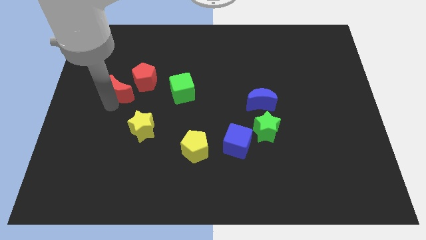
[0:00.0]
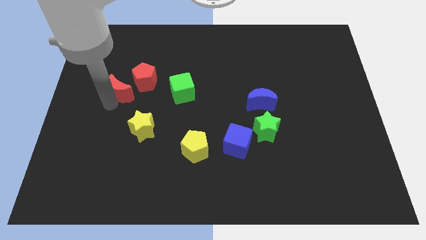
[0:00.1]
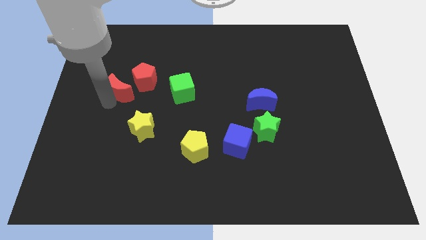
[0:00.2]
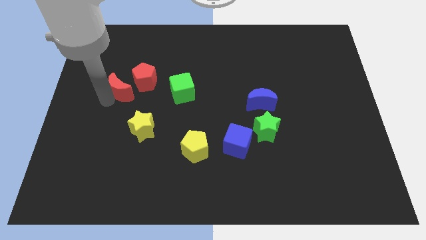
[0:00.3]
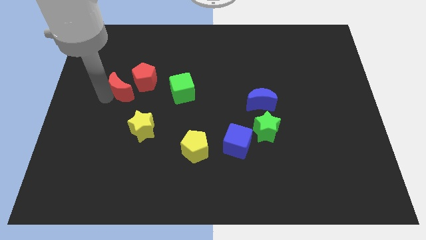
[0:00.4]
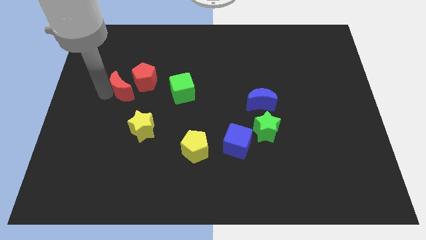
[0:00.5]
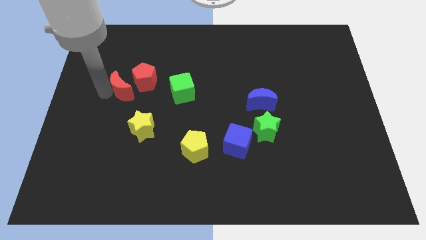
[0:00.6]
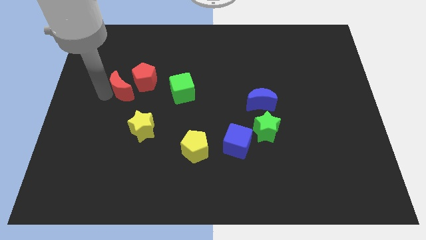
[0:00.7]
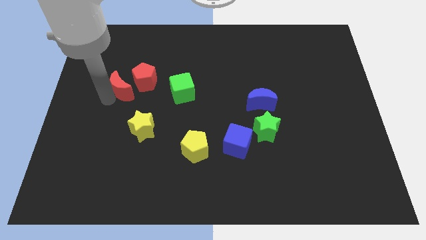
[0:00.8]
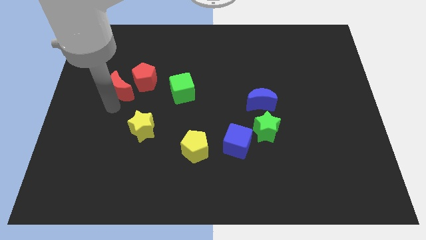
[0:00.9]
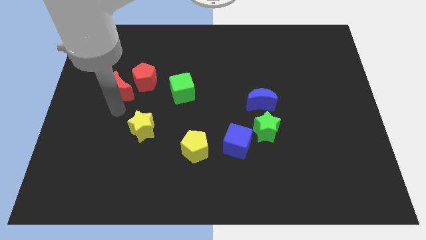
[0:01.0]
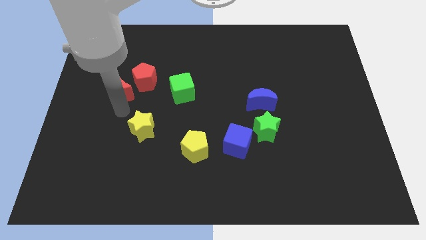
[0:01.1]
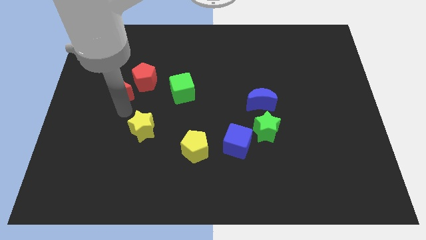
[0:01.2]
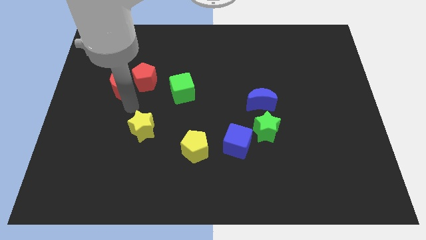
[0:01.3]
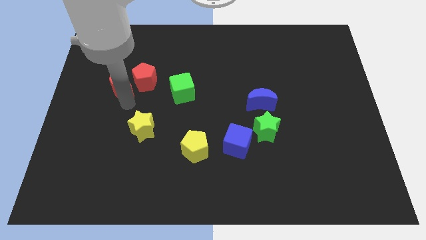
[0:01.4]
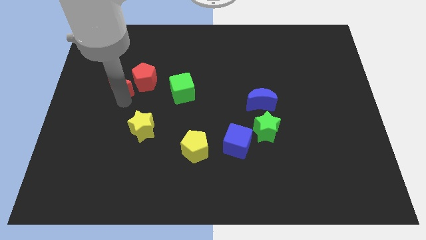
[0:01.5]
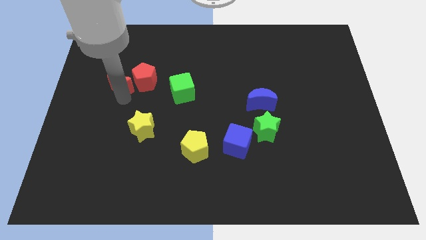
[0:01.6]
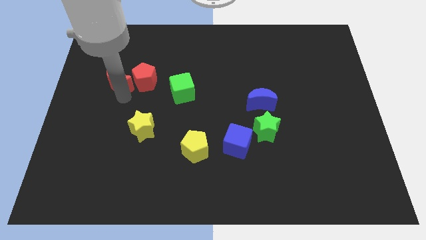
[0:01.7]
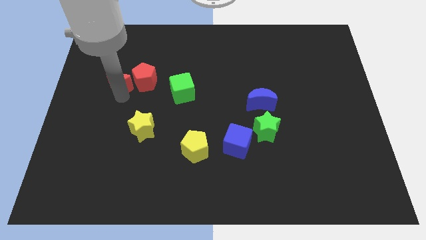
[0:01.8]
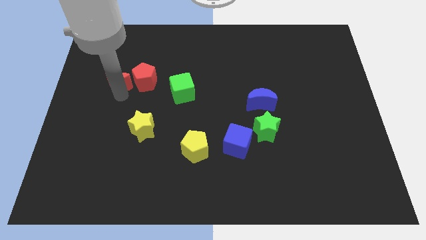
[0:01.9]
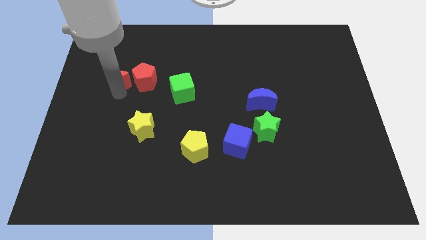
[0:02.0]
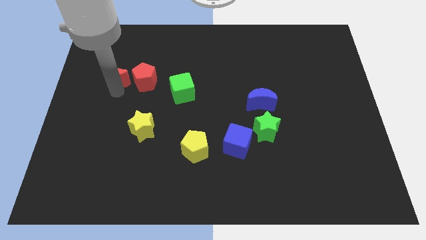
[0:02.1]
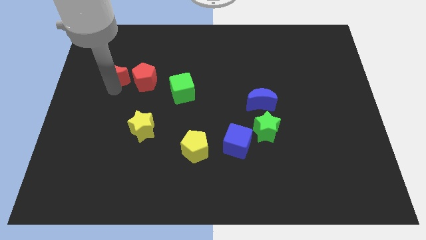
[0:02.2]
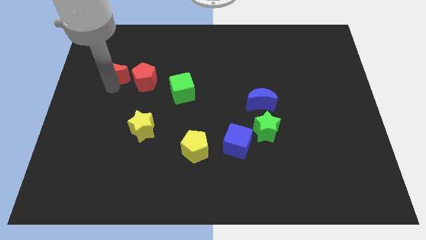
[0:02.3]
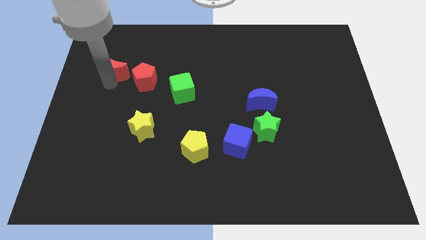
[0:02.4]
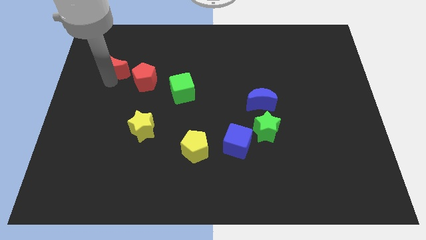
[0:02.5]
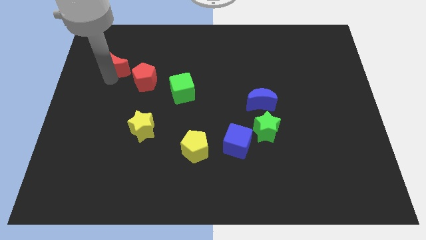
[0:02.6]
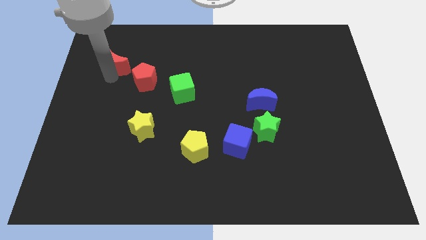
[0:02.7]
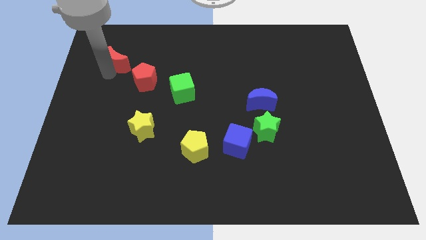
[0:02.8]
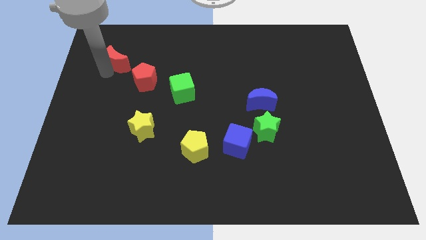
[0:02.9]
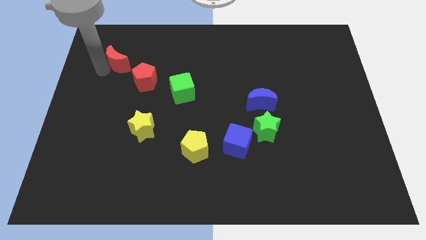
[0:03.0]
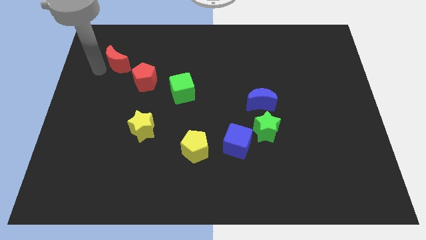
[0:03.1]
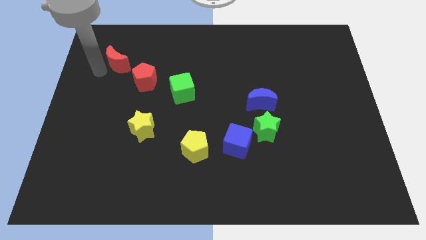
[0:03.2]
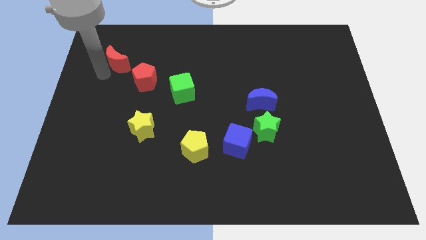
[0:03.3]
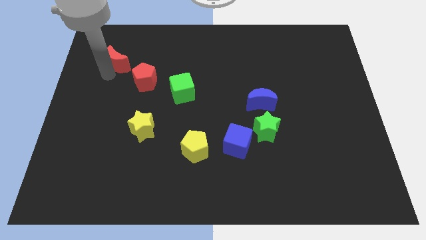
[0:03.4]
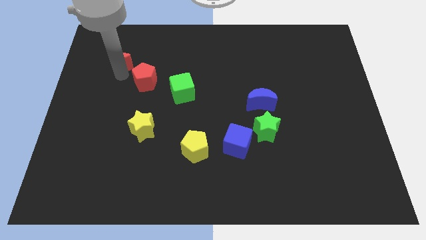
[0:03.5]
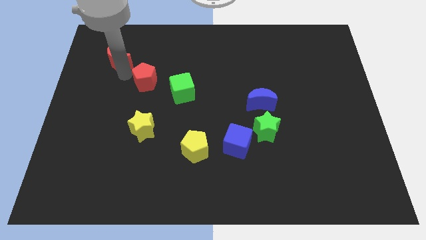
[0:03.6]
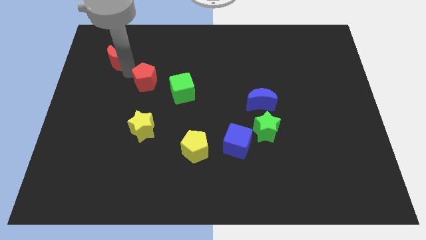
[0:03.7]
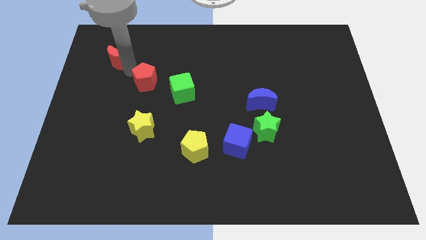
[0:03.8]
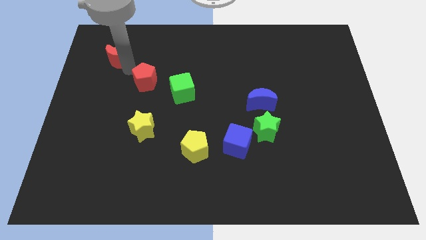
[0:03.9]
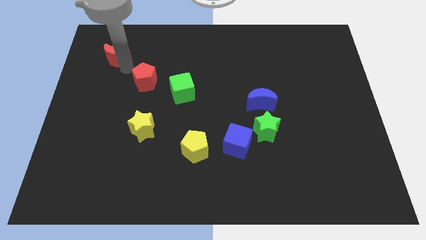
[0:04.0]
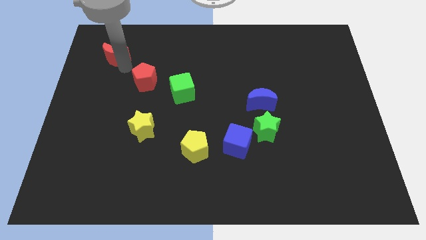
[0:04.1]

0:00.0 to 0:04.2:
move red crescent on top left to red pentagon

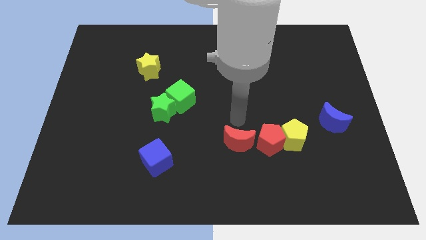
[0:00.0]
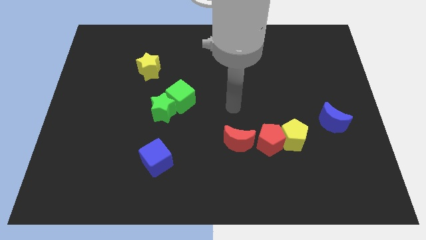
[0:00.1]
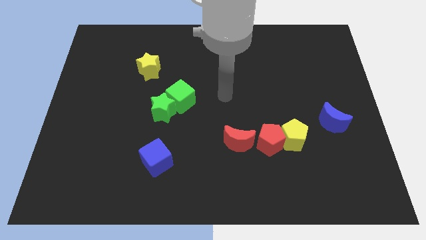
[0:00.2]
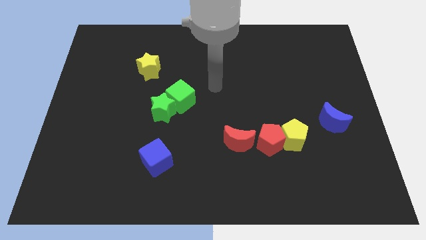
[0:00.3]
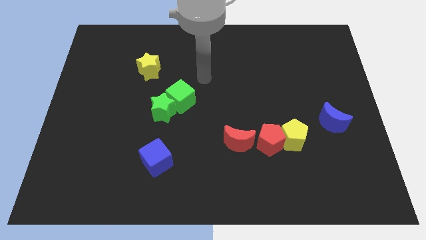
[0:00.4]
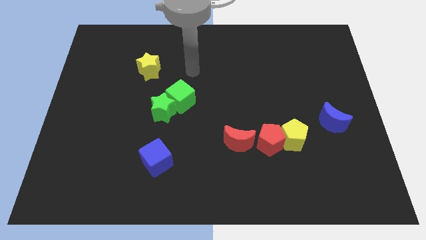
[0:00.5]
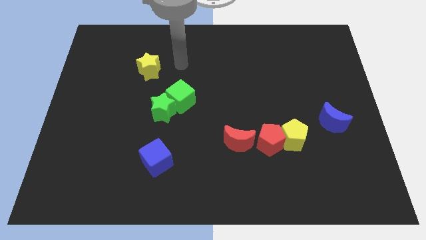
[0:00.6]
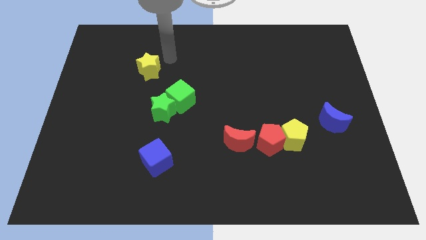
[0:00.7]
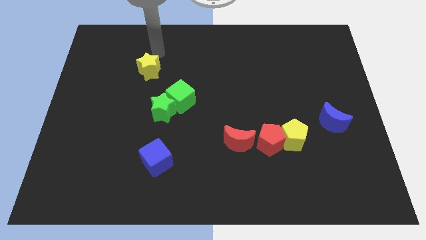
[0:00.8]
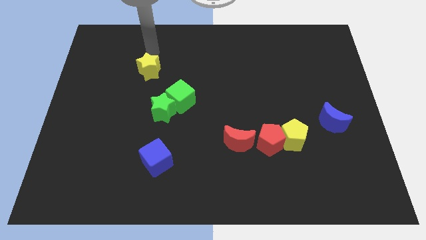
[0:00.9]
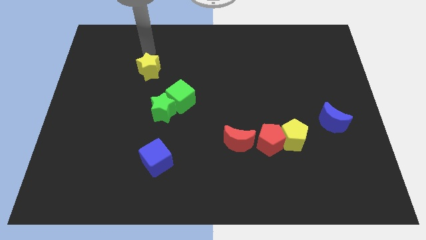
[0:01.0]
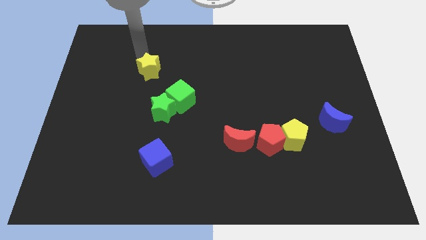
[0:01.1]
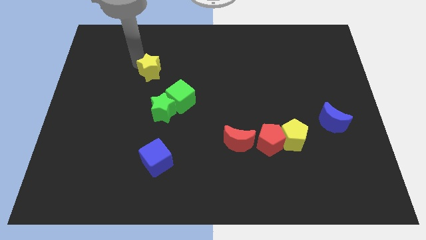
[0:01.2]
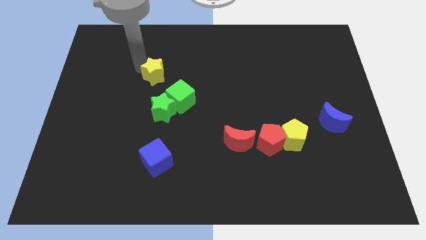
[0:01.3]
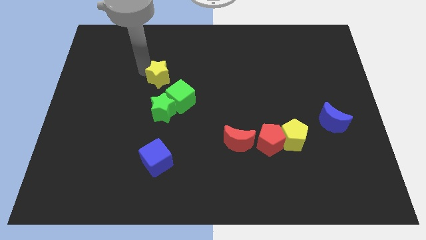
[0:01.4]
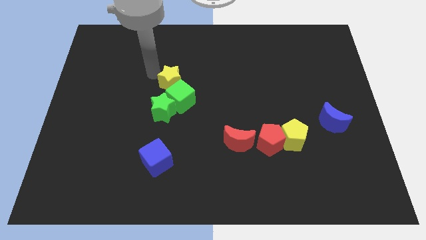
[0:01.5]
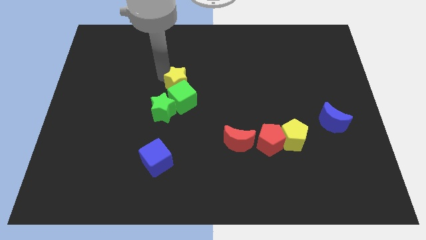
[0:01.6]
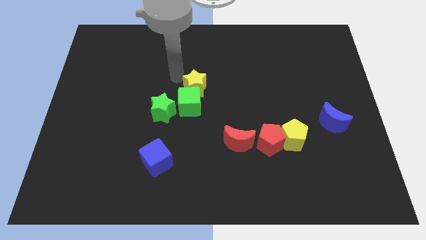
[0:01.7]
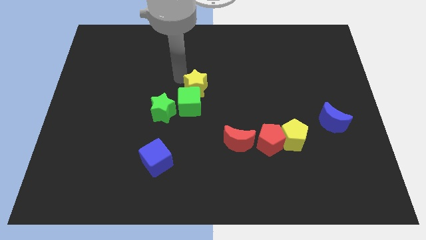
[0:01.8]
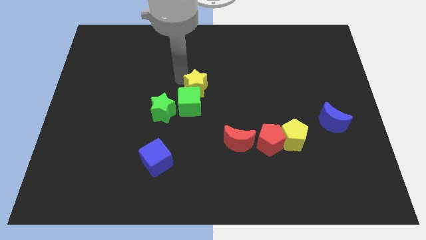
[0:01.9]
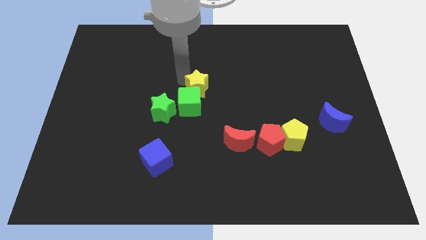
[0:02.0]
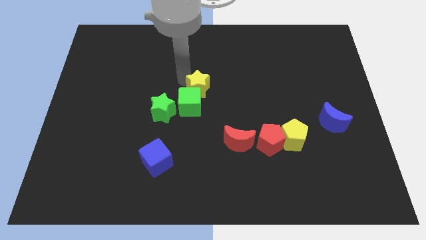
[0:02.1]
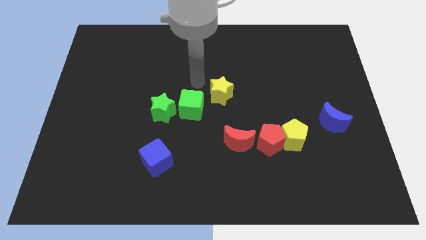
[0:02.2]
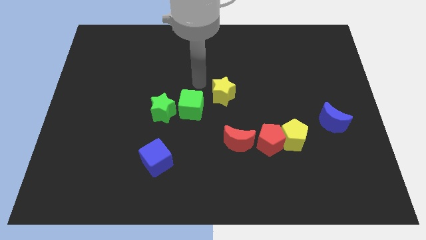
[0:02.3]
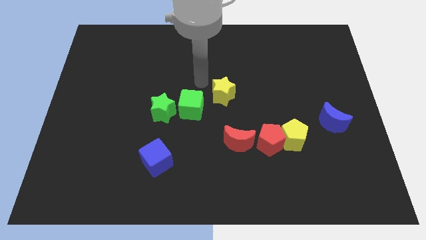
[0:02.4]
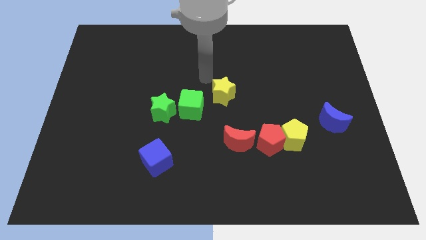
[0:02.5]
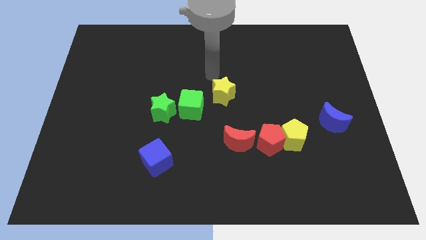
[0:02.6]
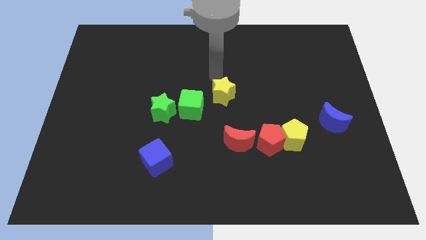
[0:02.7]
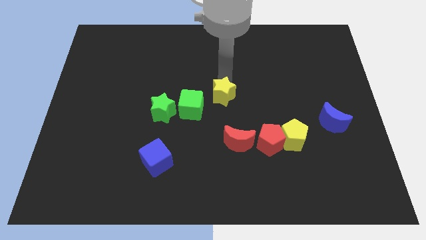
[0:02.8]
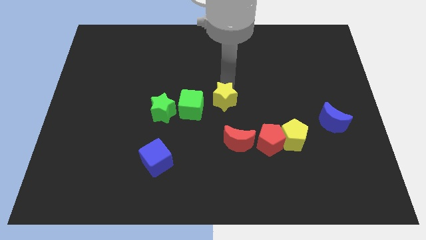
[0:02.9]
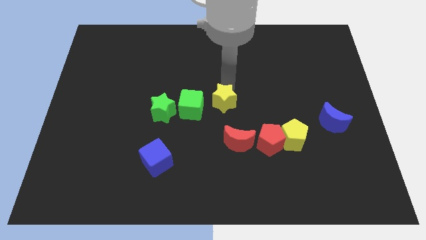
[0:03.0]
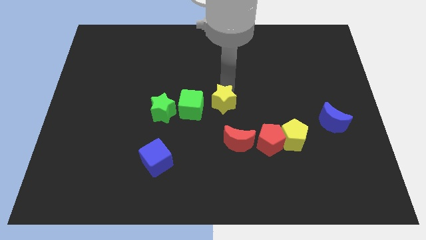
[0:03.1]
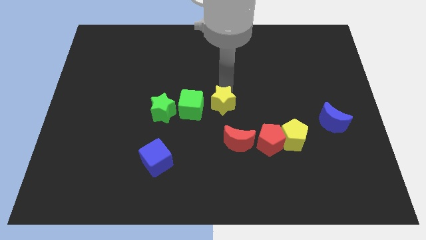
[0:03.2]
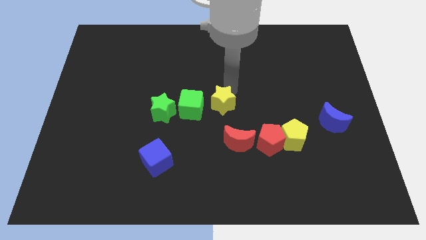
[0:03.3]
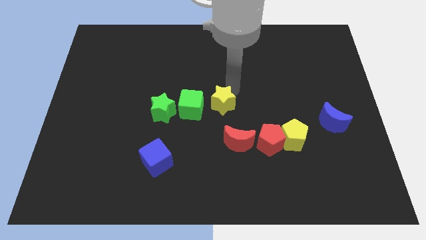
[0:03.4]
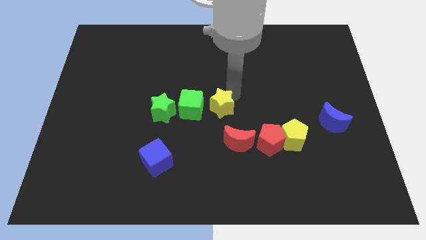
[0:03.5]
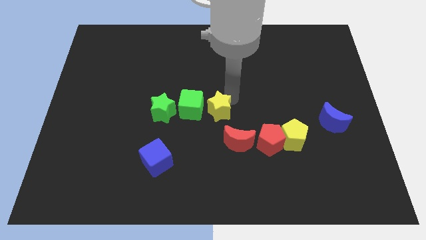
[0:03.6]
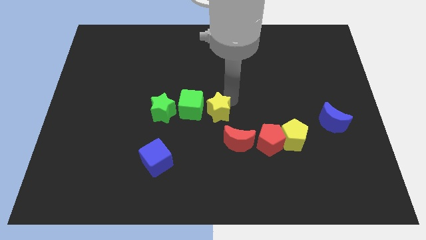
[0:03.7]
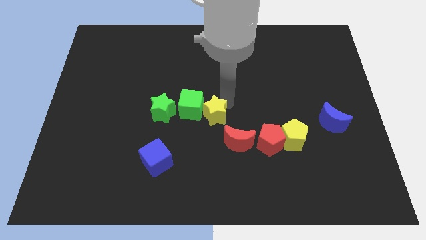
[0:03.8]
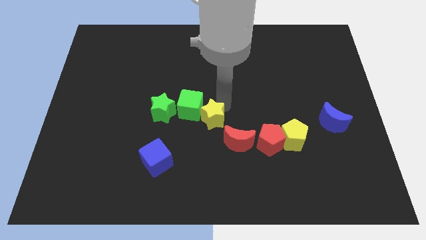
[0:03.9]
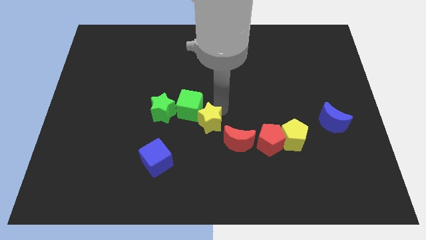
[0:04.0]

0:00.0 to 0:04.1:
move the yellow star into the right side of the green cube

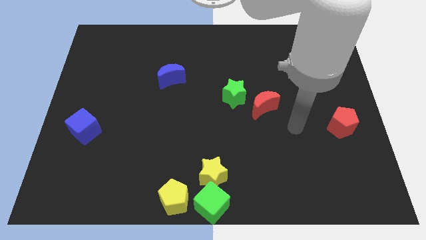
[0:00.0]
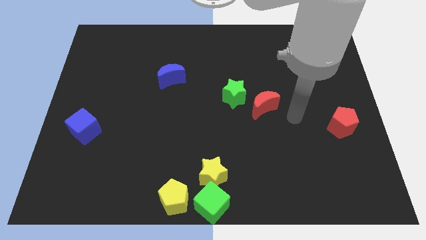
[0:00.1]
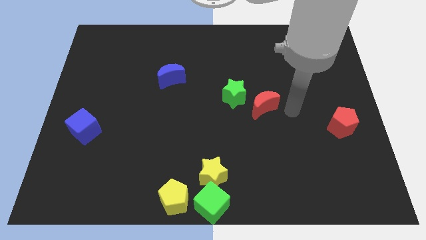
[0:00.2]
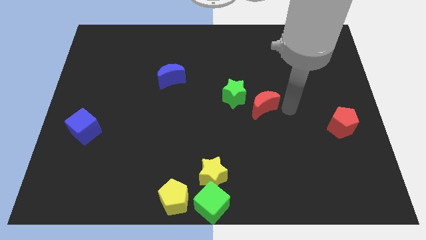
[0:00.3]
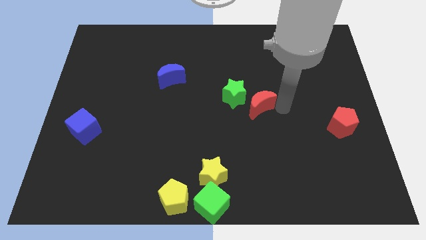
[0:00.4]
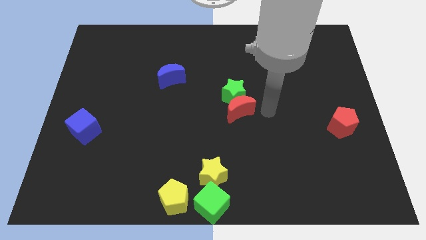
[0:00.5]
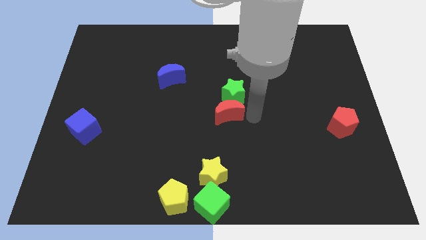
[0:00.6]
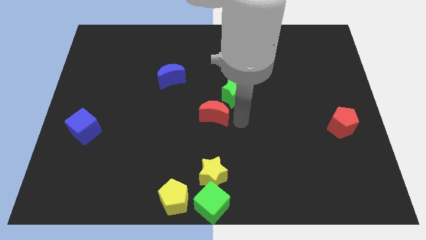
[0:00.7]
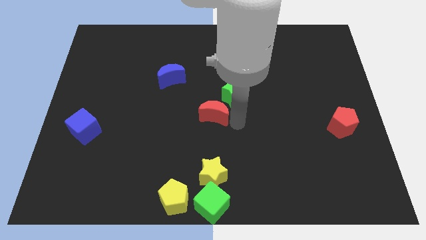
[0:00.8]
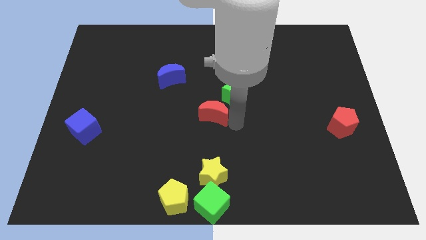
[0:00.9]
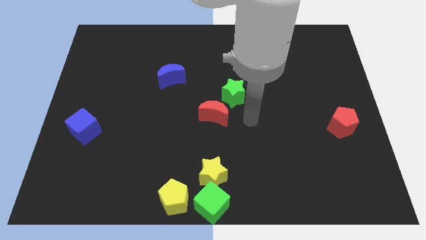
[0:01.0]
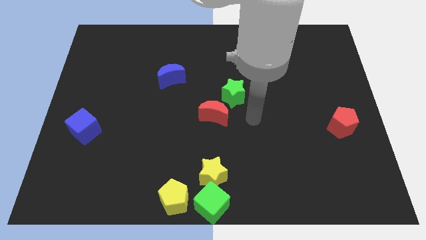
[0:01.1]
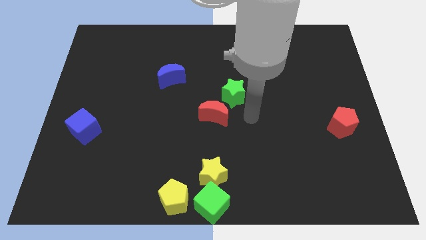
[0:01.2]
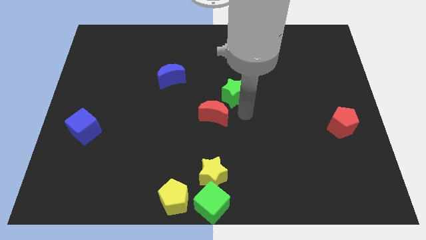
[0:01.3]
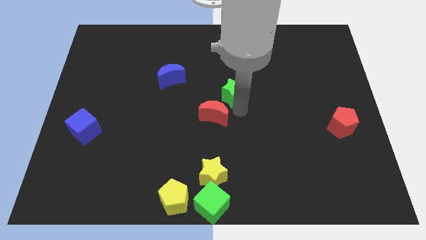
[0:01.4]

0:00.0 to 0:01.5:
push the red crescent to the bottom left side of the green star
